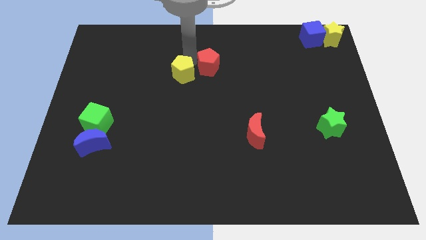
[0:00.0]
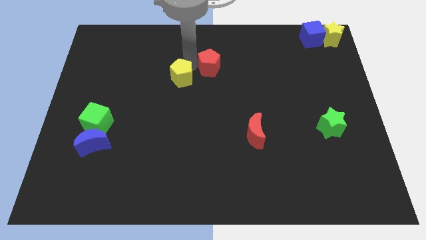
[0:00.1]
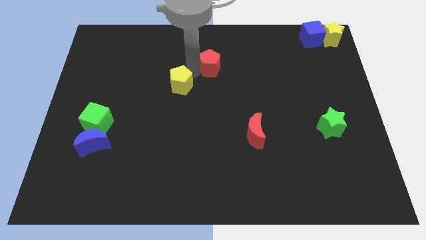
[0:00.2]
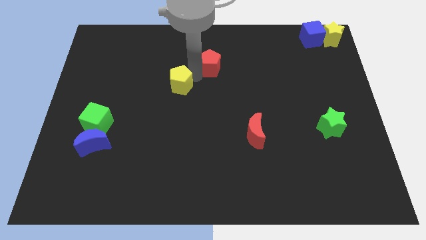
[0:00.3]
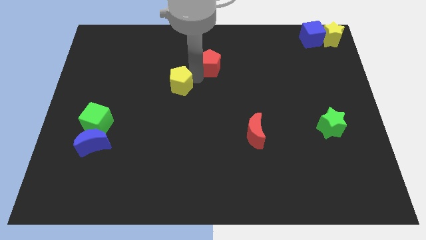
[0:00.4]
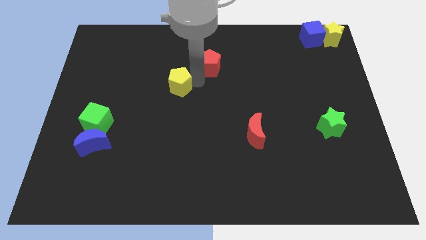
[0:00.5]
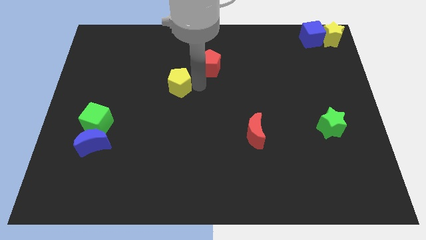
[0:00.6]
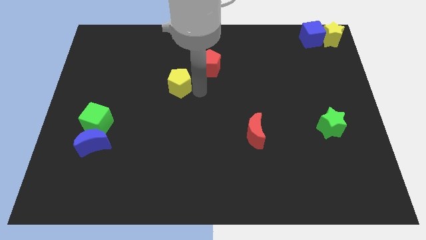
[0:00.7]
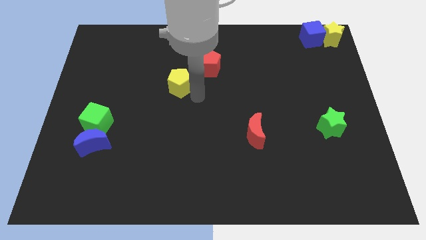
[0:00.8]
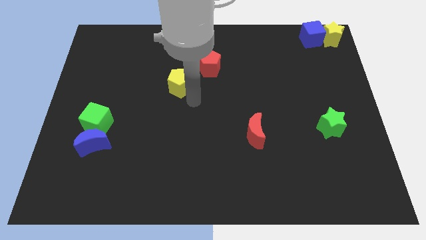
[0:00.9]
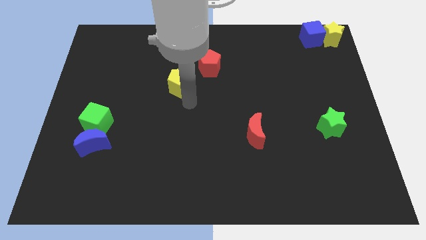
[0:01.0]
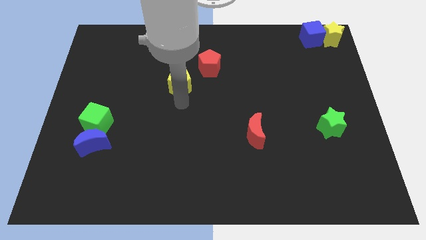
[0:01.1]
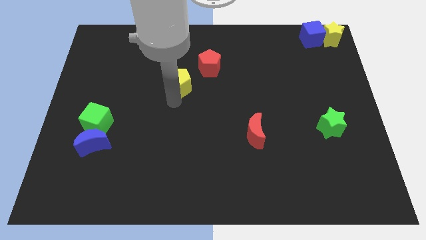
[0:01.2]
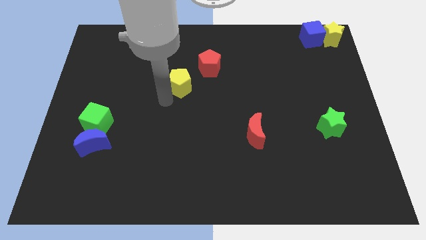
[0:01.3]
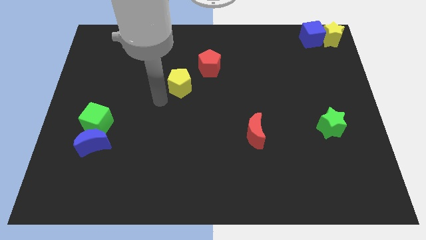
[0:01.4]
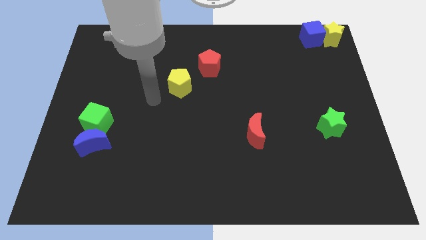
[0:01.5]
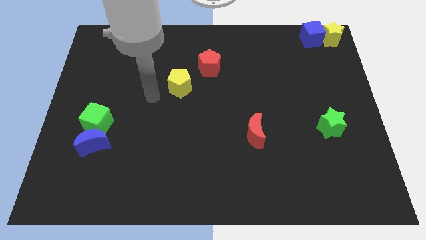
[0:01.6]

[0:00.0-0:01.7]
push the yellow pentagon away from the red pentagon

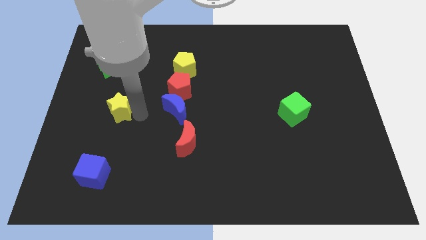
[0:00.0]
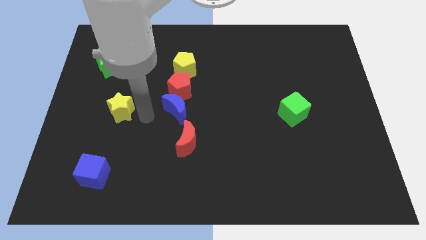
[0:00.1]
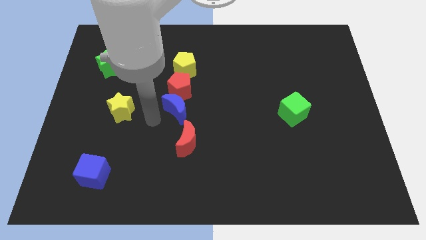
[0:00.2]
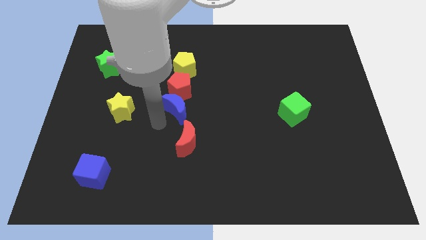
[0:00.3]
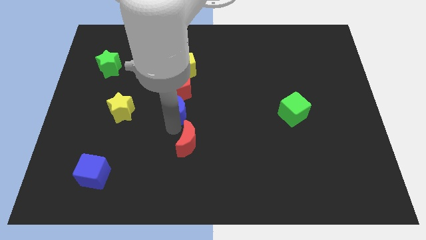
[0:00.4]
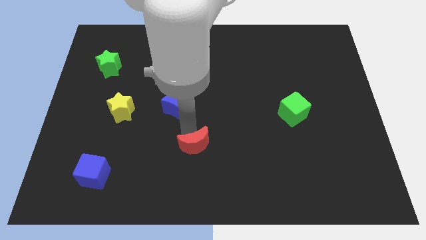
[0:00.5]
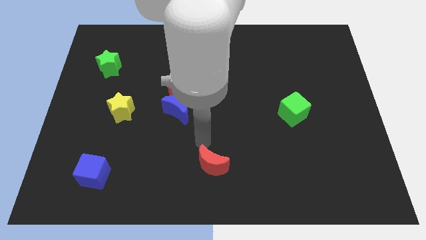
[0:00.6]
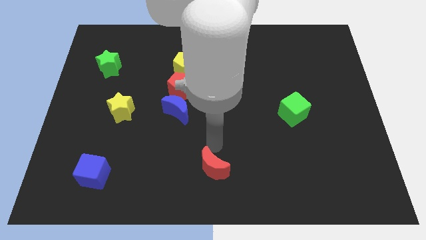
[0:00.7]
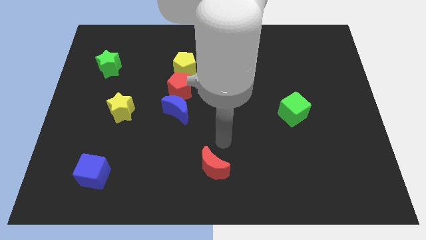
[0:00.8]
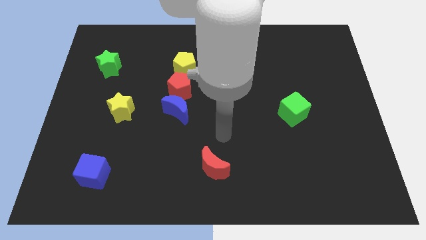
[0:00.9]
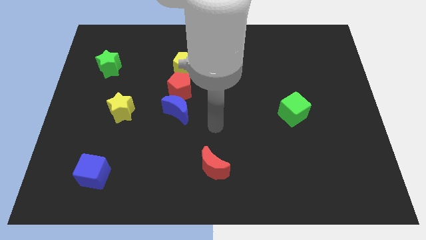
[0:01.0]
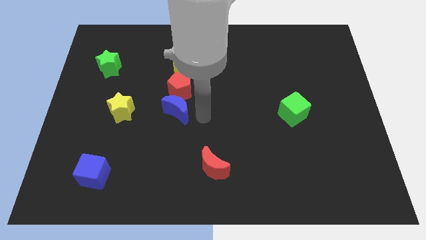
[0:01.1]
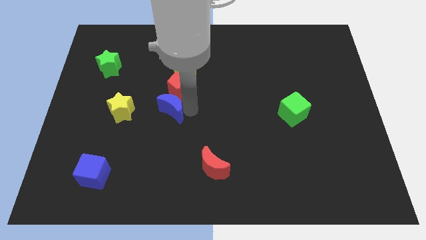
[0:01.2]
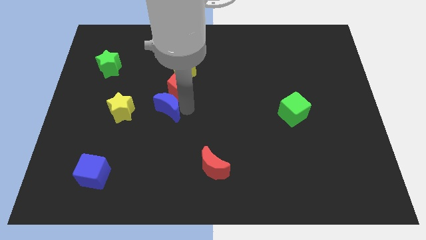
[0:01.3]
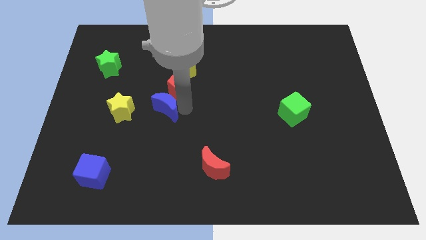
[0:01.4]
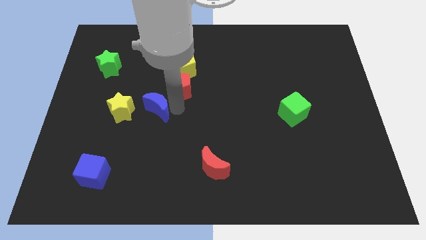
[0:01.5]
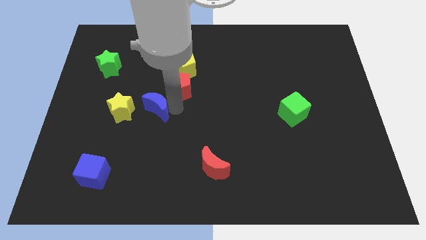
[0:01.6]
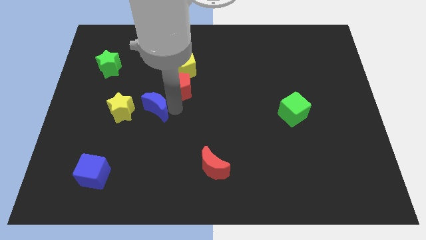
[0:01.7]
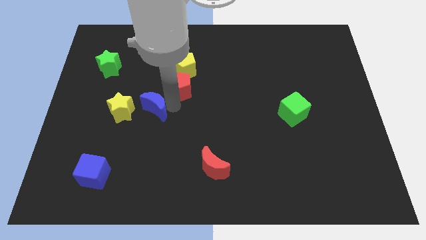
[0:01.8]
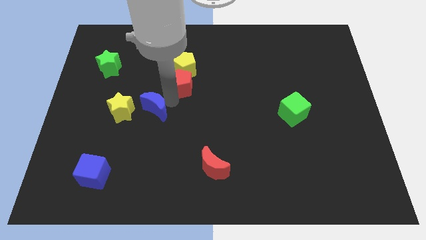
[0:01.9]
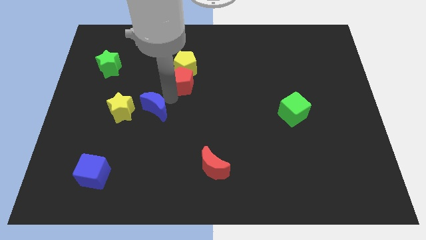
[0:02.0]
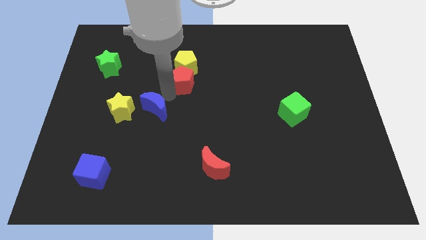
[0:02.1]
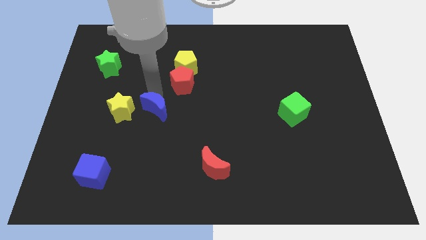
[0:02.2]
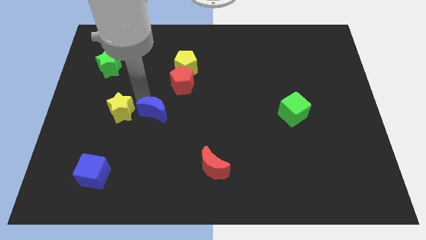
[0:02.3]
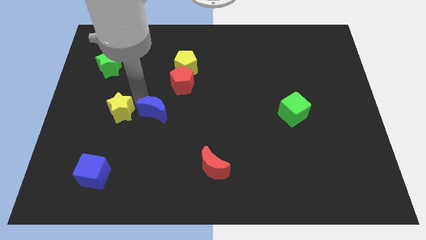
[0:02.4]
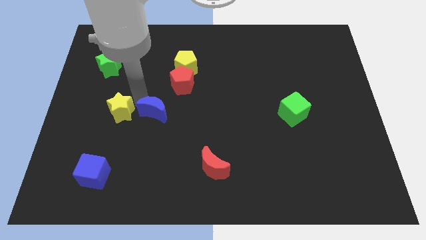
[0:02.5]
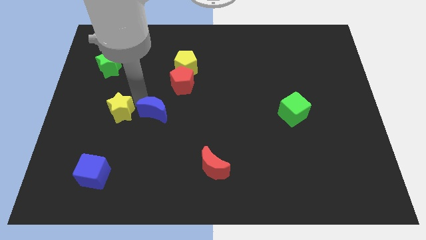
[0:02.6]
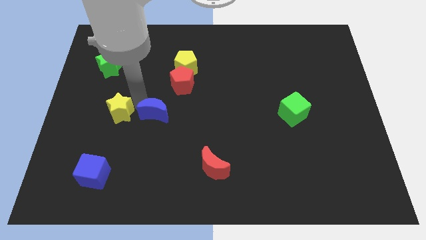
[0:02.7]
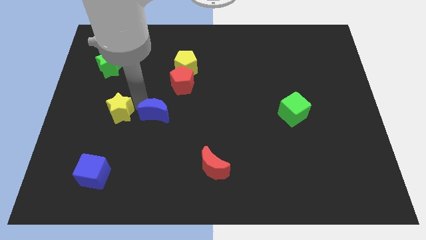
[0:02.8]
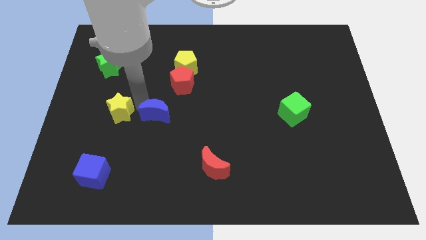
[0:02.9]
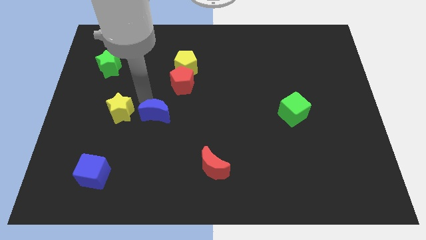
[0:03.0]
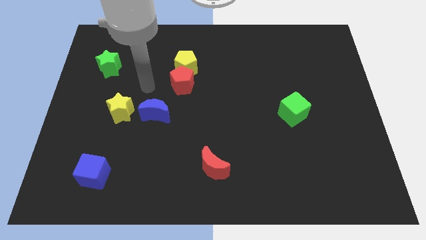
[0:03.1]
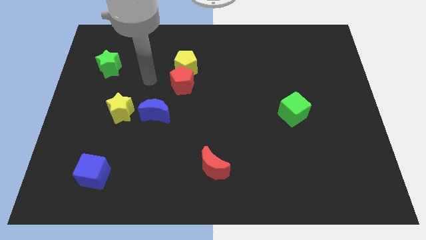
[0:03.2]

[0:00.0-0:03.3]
separate the blue moon and the red crescent

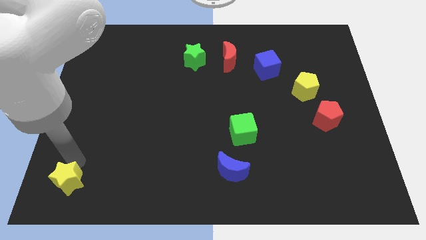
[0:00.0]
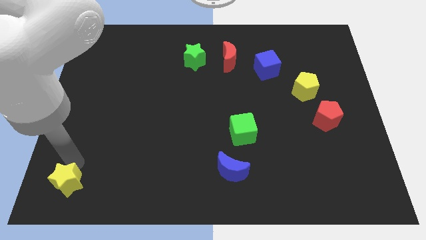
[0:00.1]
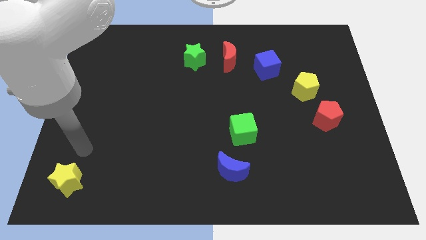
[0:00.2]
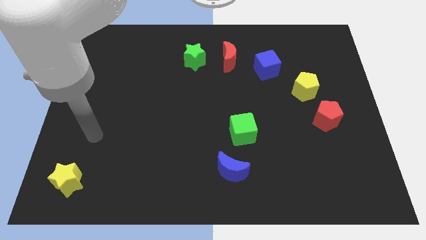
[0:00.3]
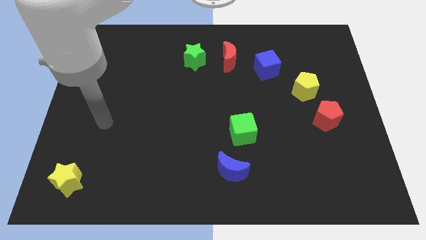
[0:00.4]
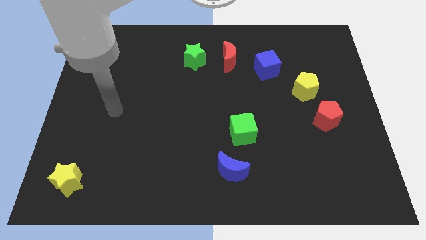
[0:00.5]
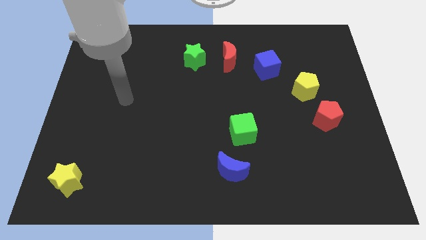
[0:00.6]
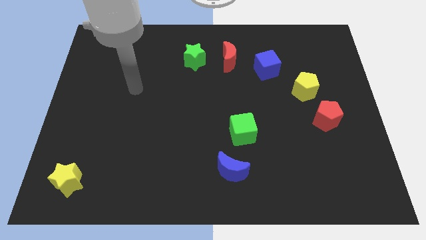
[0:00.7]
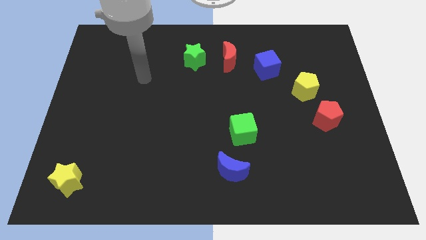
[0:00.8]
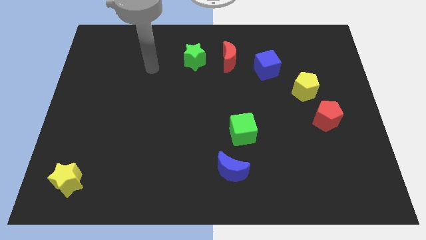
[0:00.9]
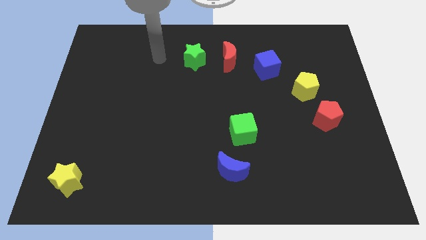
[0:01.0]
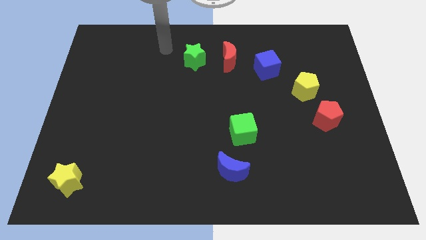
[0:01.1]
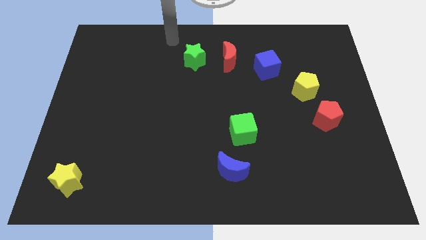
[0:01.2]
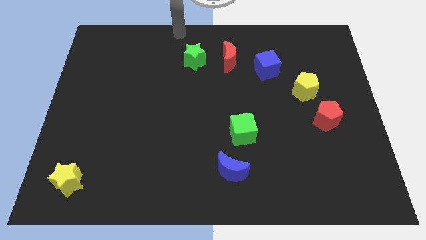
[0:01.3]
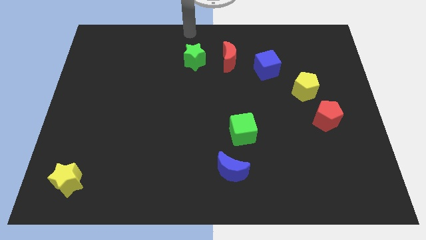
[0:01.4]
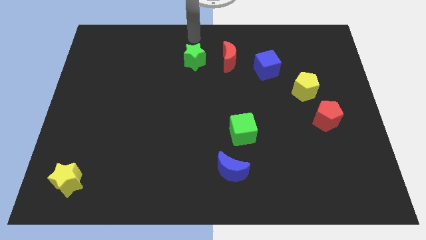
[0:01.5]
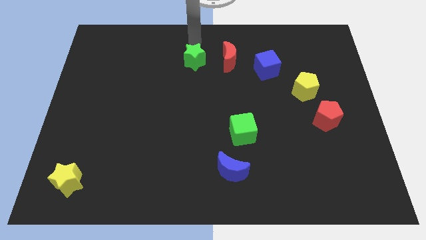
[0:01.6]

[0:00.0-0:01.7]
put arm above the green star

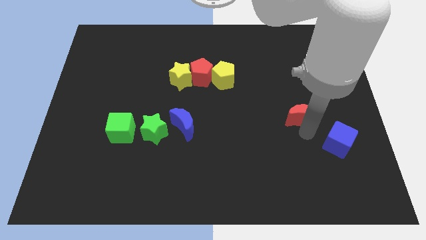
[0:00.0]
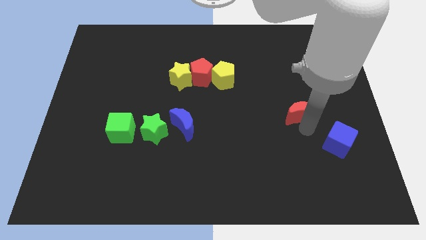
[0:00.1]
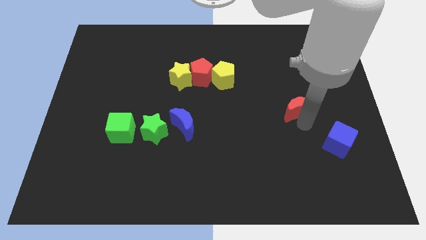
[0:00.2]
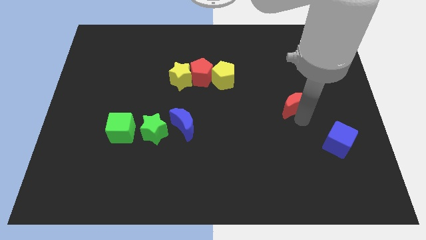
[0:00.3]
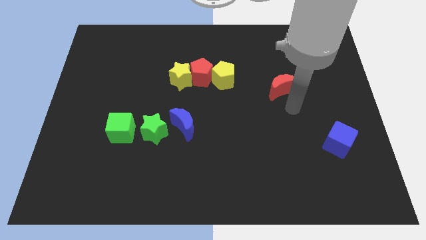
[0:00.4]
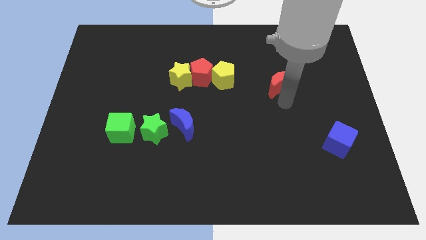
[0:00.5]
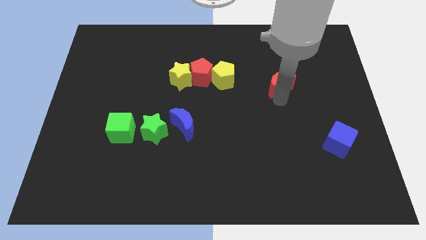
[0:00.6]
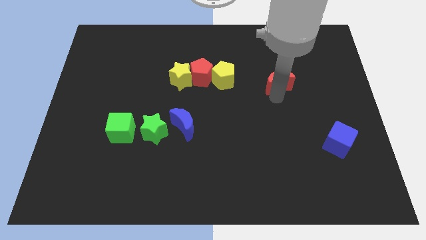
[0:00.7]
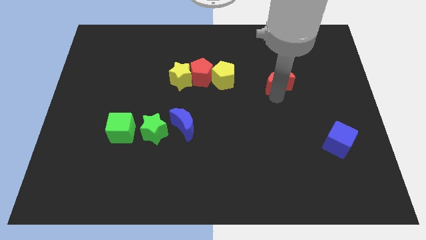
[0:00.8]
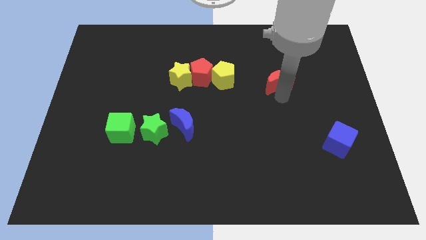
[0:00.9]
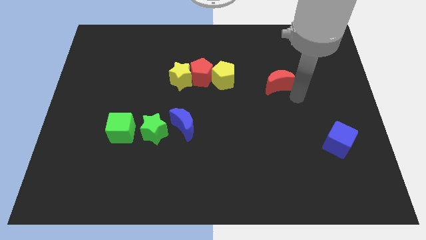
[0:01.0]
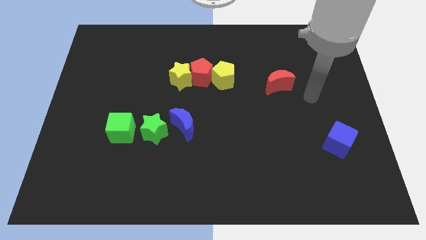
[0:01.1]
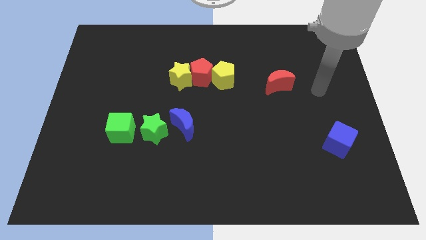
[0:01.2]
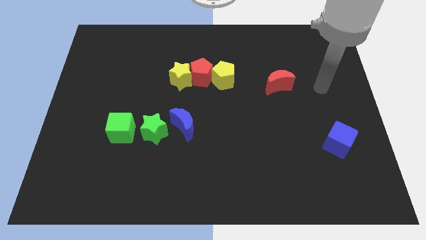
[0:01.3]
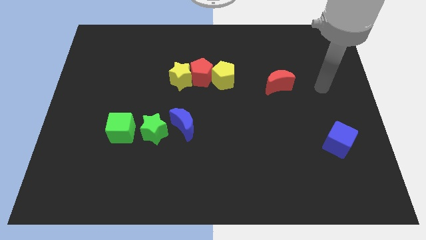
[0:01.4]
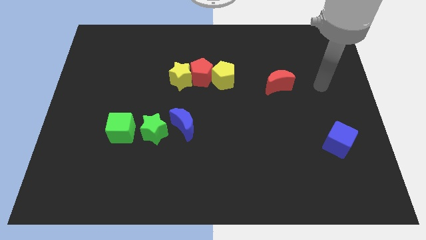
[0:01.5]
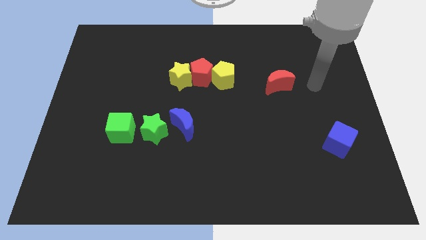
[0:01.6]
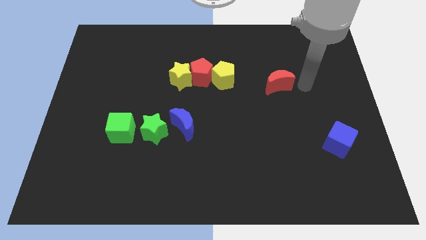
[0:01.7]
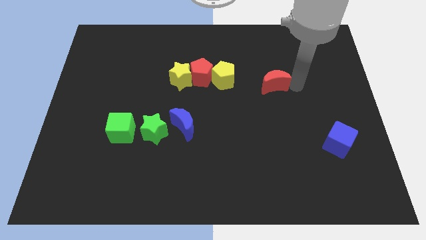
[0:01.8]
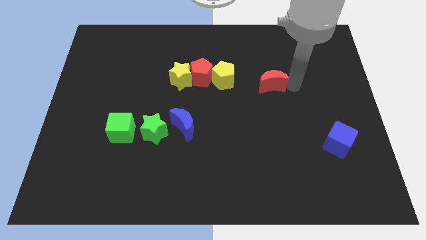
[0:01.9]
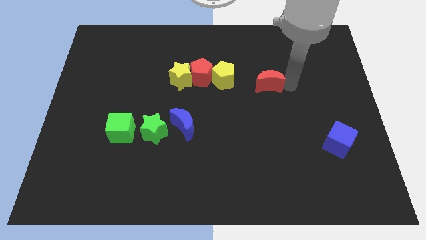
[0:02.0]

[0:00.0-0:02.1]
push the red crescent to the right of the yellow pentagon
